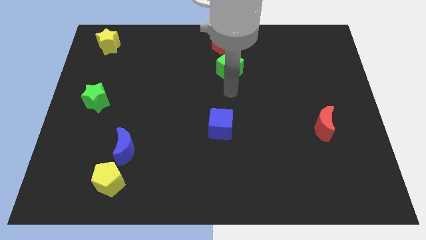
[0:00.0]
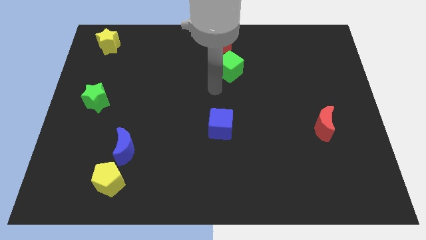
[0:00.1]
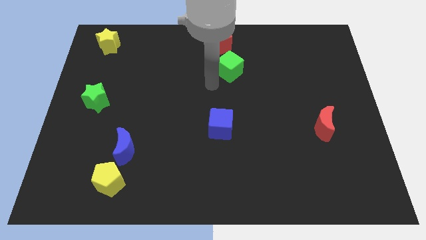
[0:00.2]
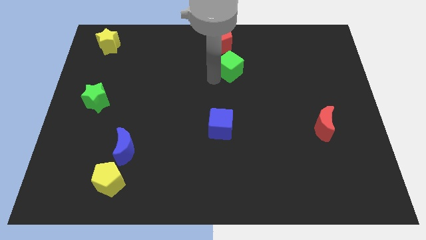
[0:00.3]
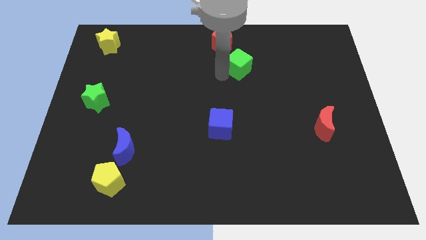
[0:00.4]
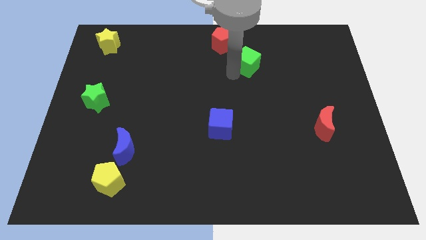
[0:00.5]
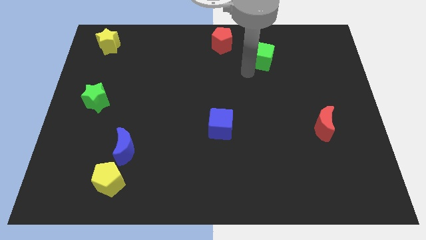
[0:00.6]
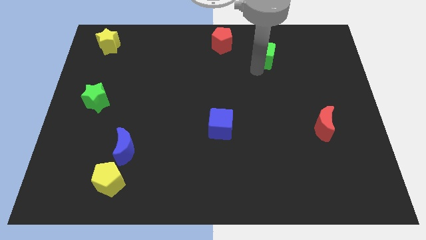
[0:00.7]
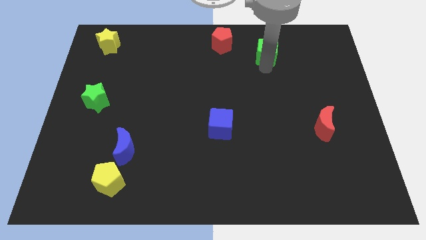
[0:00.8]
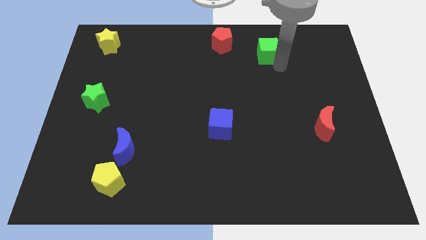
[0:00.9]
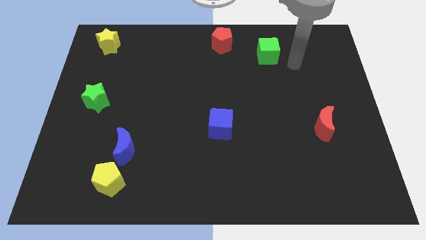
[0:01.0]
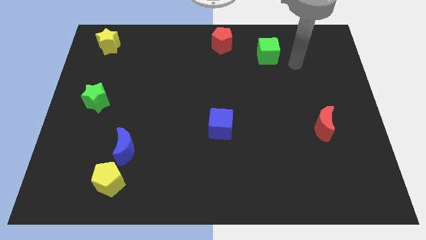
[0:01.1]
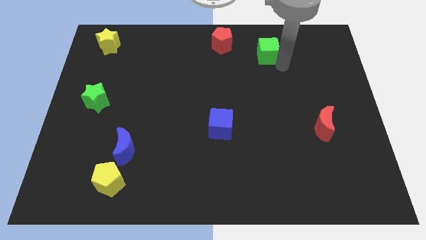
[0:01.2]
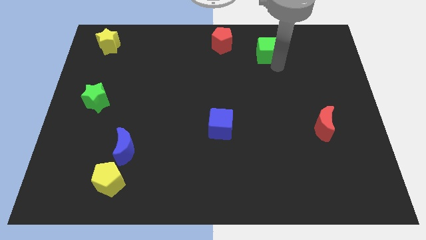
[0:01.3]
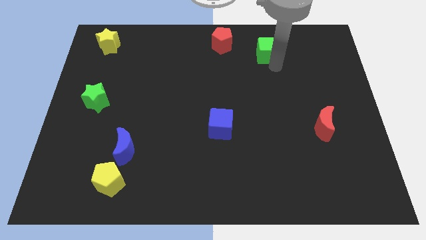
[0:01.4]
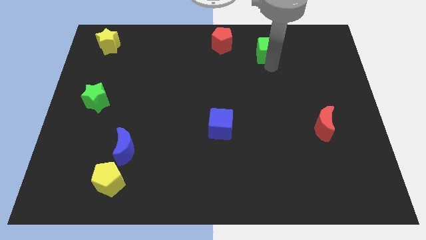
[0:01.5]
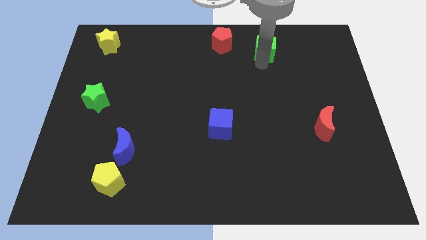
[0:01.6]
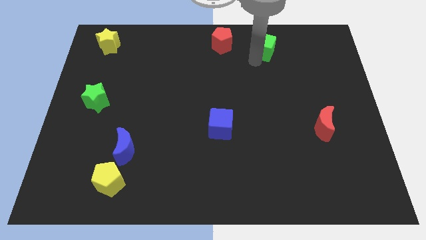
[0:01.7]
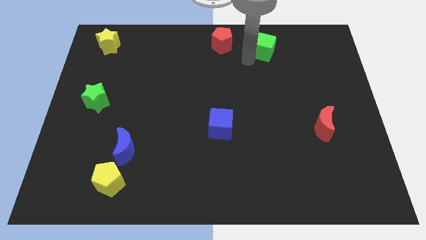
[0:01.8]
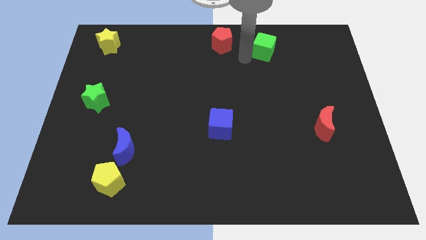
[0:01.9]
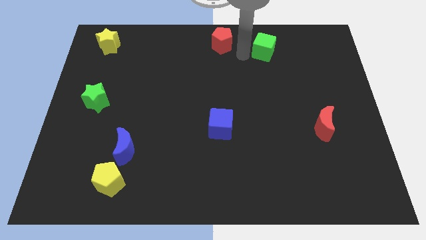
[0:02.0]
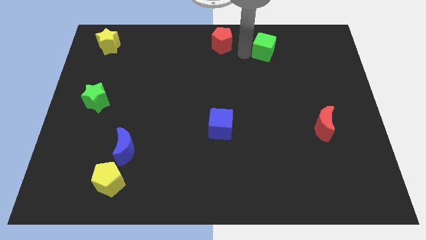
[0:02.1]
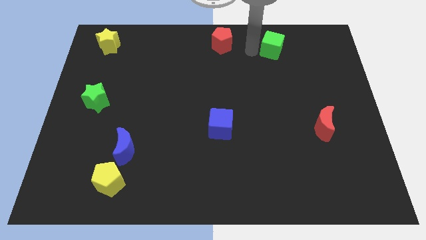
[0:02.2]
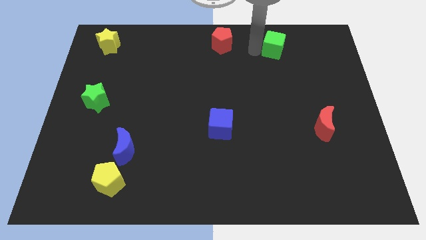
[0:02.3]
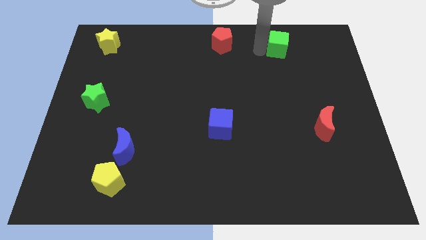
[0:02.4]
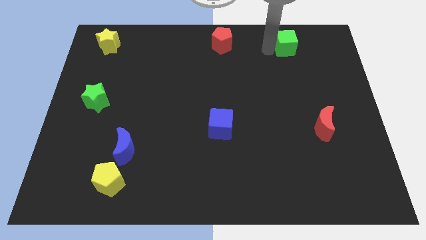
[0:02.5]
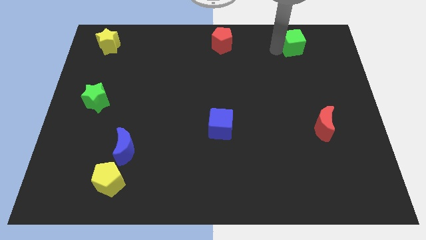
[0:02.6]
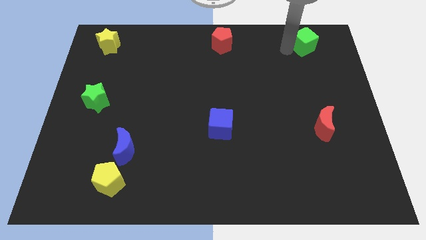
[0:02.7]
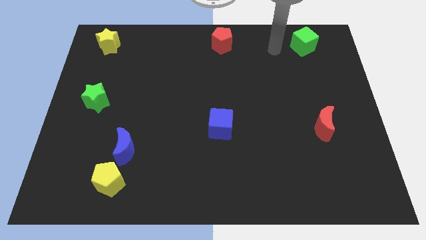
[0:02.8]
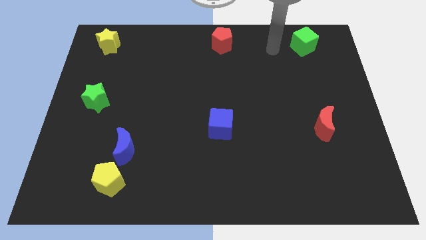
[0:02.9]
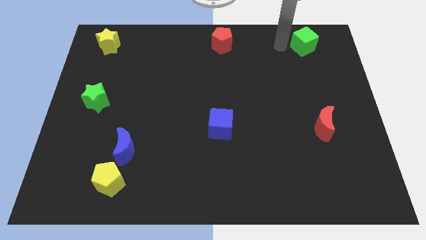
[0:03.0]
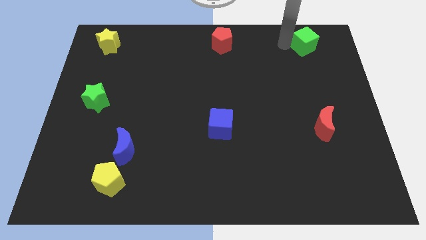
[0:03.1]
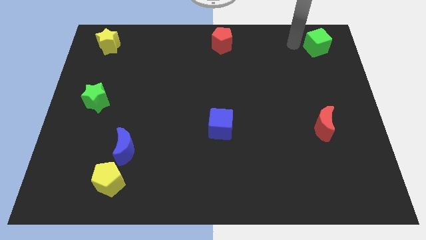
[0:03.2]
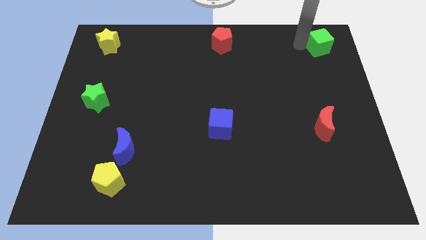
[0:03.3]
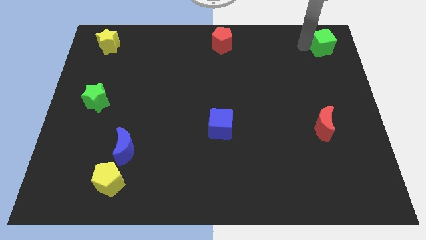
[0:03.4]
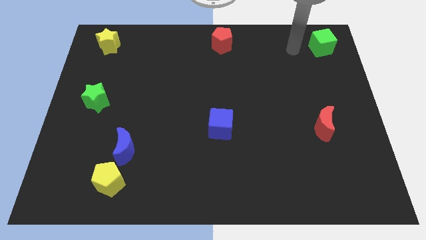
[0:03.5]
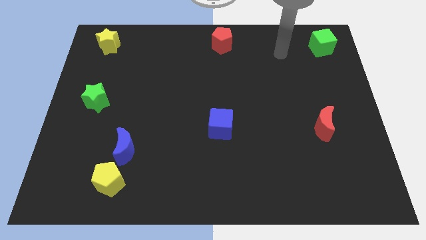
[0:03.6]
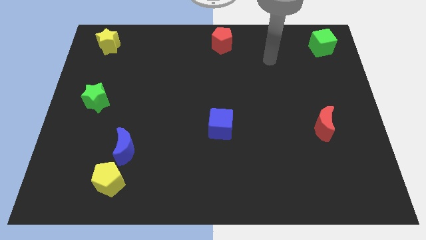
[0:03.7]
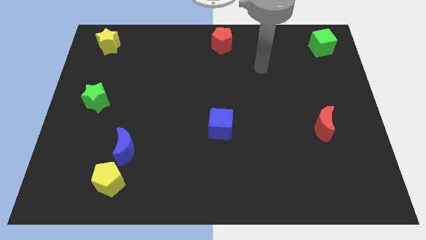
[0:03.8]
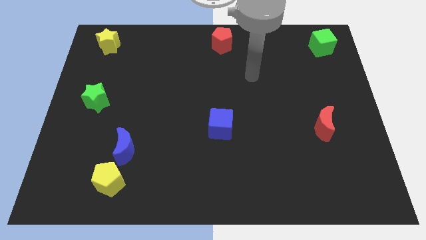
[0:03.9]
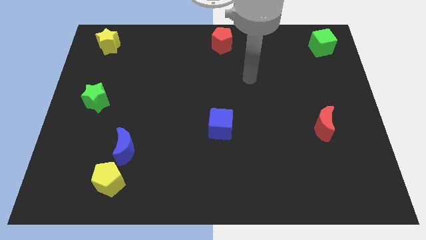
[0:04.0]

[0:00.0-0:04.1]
move the green cube towards the top right side of the board

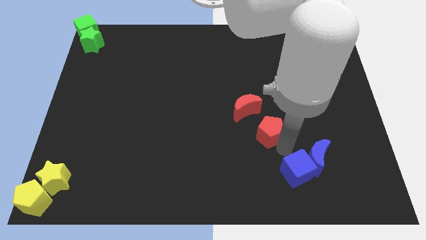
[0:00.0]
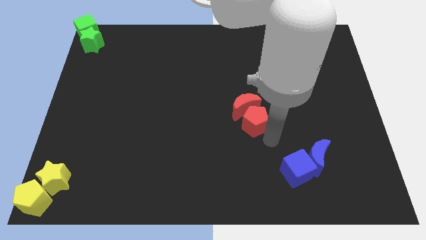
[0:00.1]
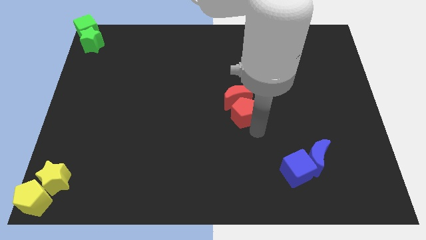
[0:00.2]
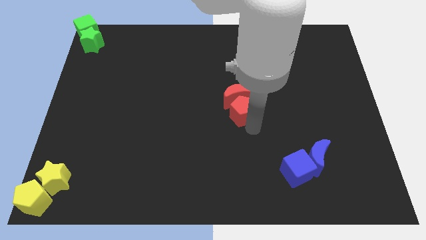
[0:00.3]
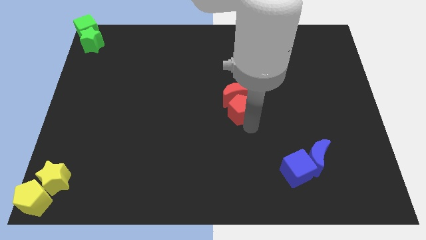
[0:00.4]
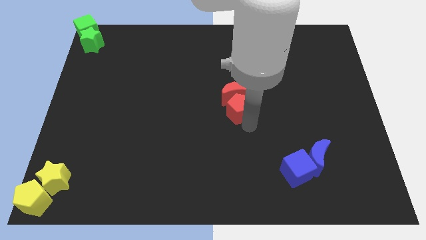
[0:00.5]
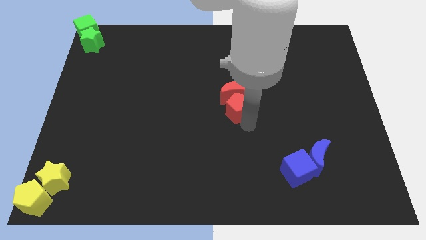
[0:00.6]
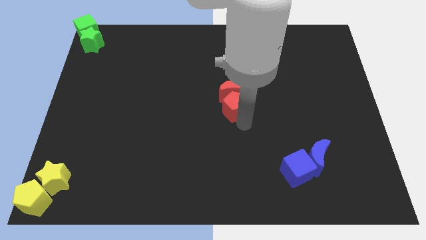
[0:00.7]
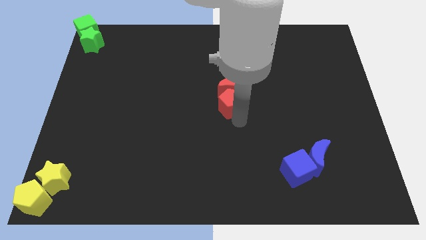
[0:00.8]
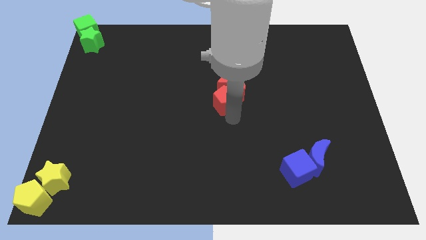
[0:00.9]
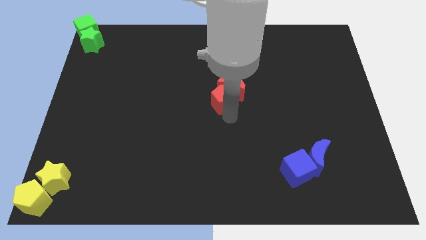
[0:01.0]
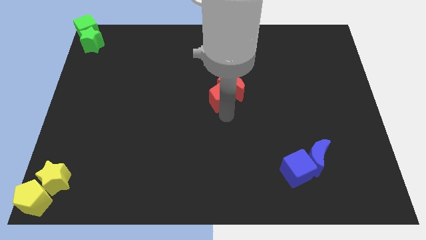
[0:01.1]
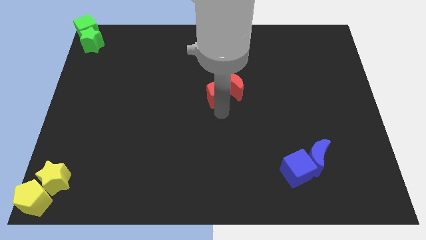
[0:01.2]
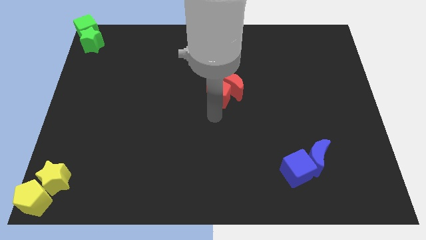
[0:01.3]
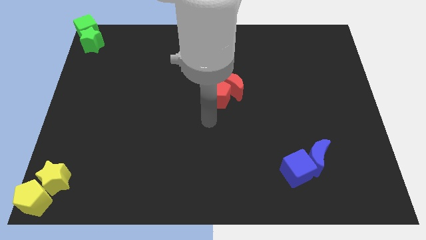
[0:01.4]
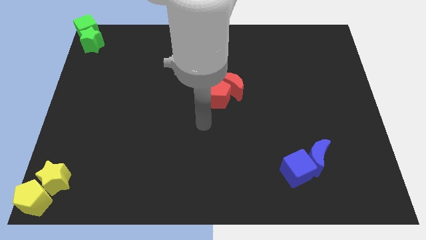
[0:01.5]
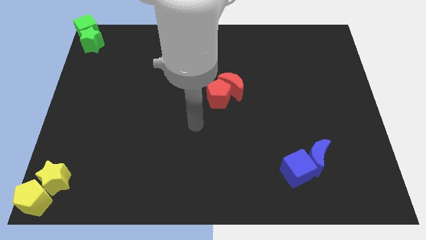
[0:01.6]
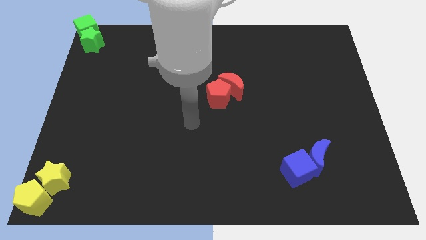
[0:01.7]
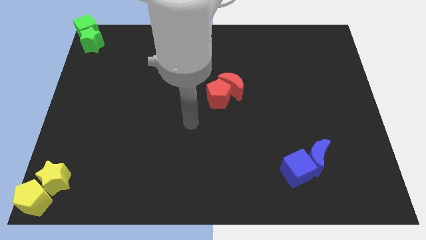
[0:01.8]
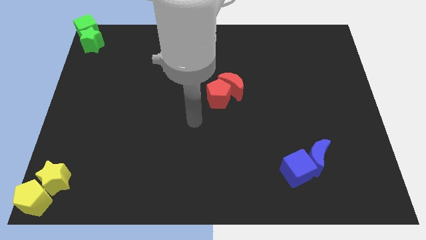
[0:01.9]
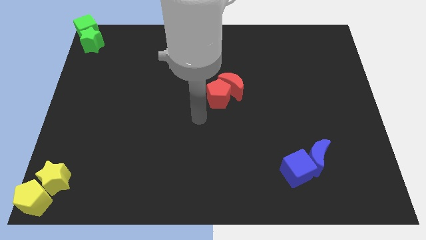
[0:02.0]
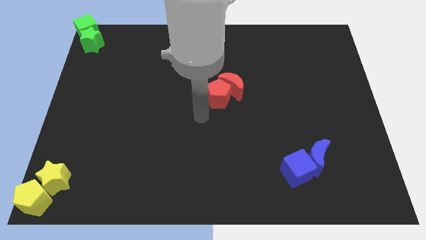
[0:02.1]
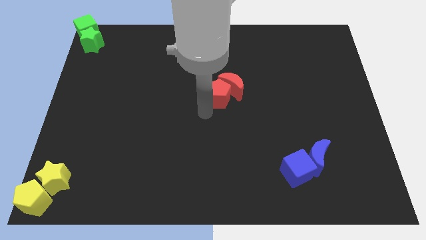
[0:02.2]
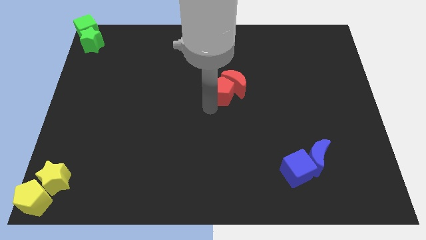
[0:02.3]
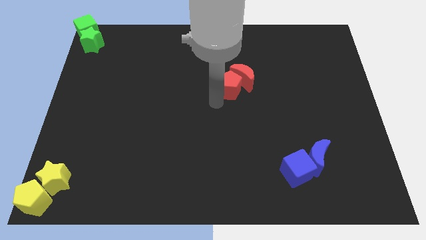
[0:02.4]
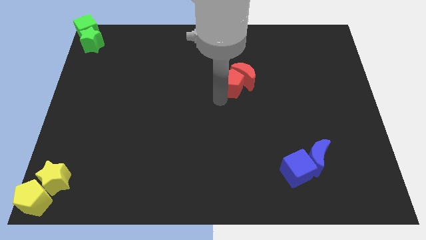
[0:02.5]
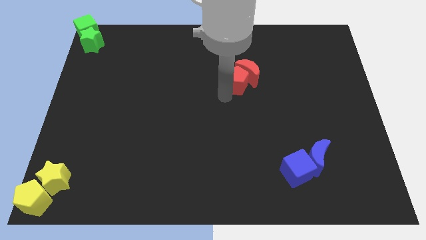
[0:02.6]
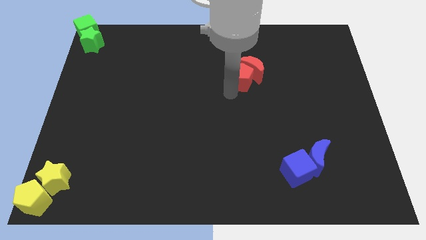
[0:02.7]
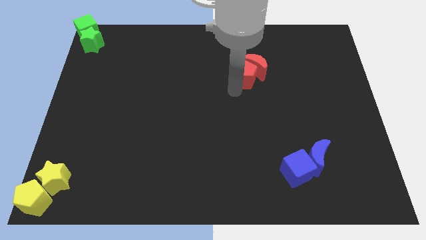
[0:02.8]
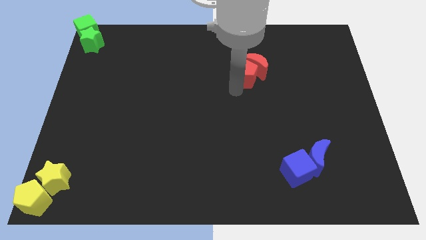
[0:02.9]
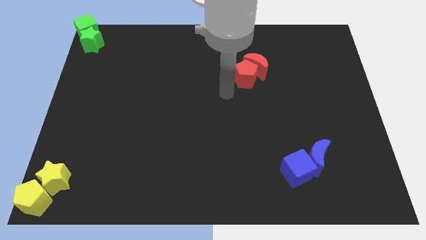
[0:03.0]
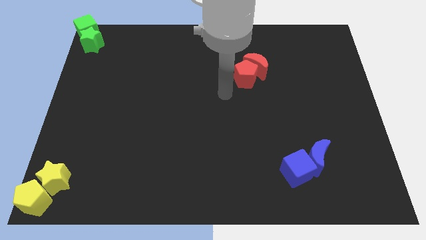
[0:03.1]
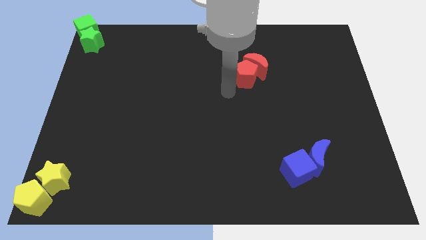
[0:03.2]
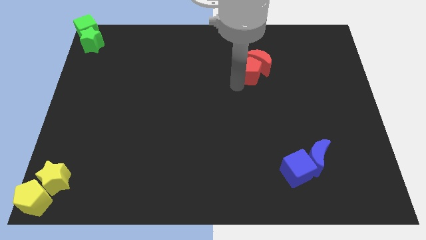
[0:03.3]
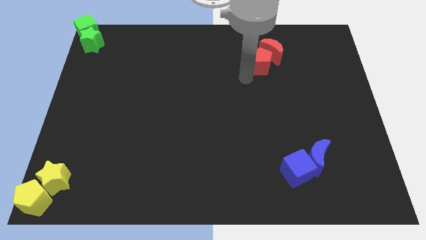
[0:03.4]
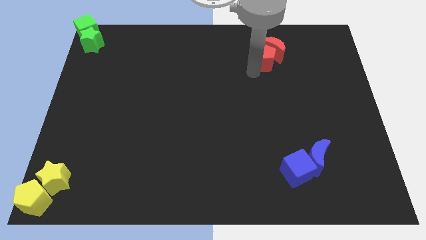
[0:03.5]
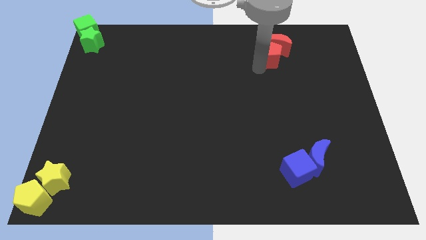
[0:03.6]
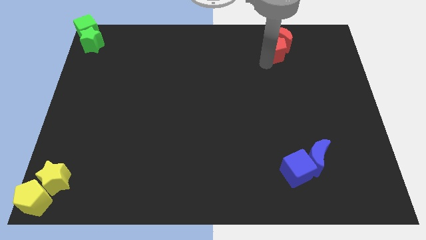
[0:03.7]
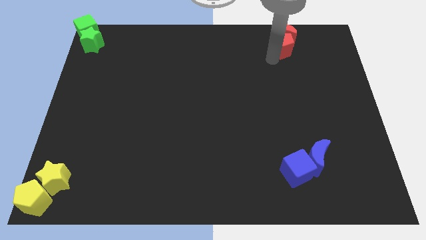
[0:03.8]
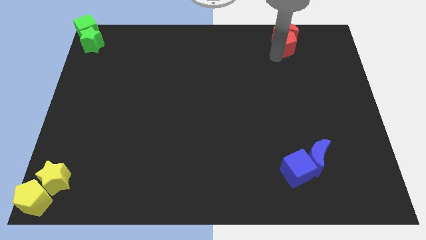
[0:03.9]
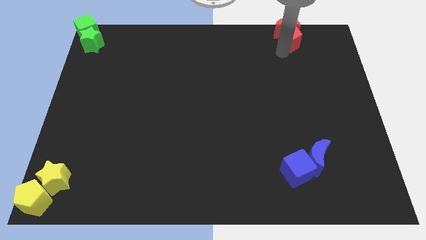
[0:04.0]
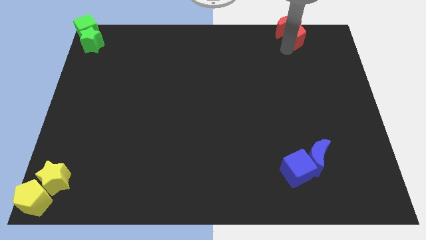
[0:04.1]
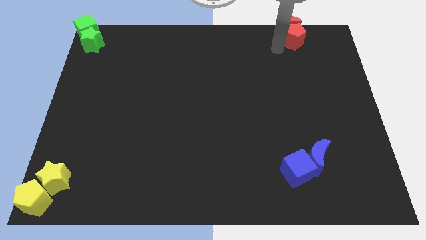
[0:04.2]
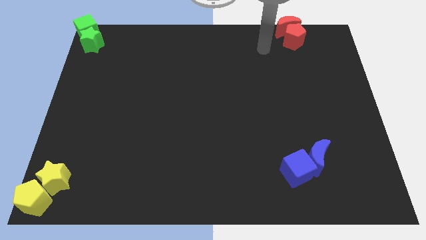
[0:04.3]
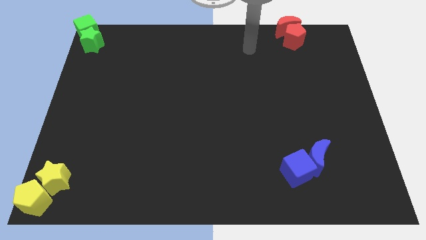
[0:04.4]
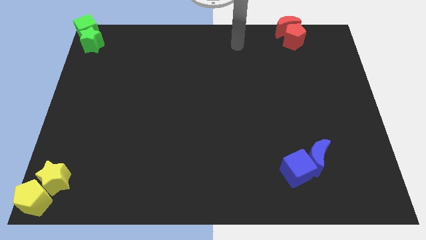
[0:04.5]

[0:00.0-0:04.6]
move the red blocks towards the top

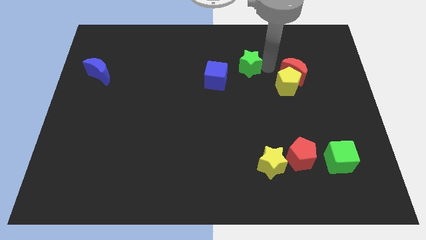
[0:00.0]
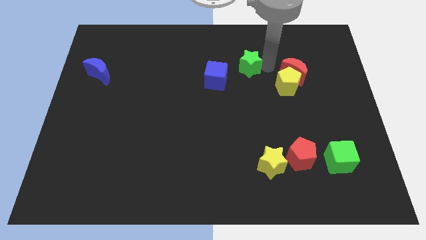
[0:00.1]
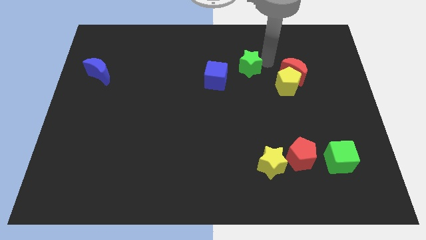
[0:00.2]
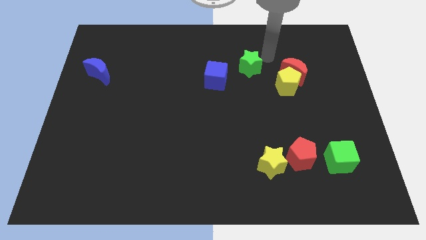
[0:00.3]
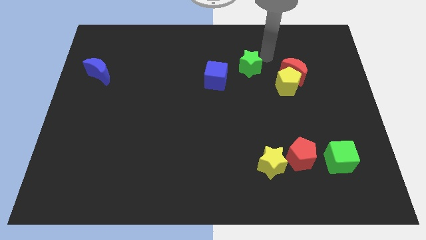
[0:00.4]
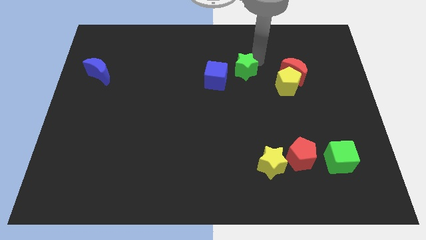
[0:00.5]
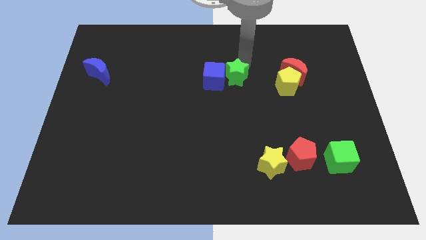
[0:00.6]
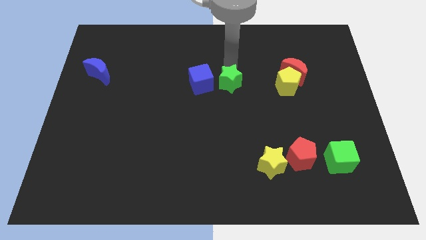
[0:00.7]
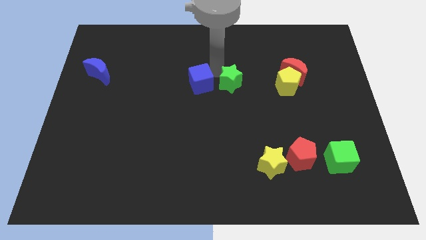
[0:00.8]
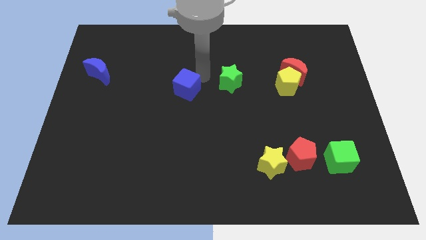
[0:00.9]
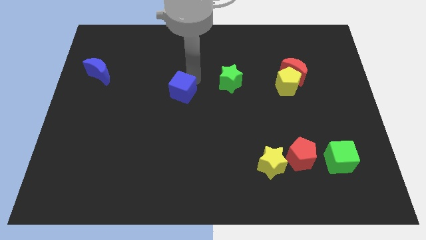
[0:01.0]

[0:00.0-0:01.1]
push the green star into the blue cube
